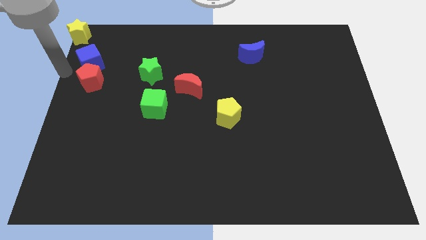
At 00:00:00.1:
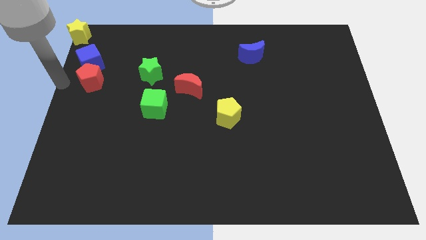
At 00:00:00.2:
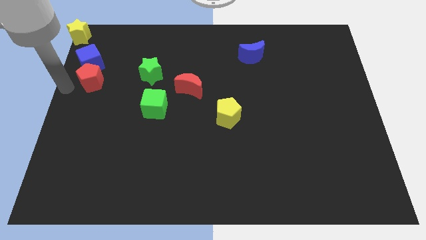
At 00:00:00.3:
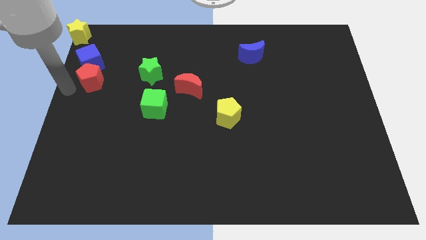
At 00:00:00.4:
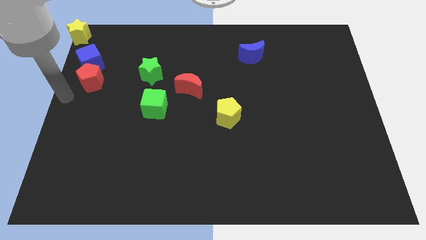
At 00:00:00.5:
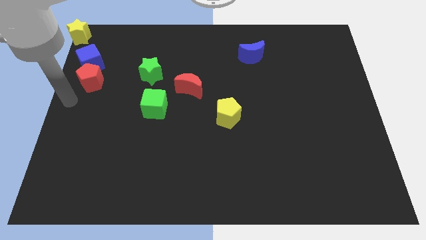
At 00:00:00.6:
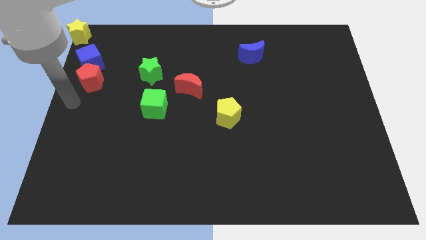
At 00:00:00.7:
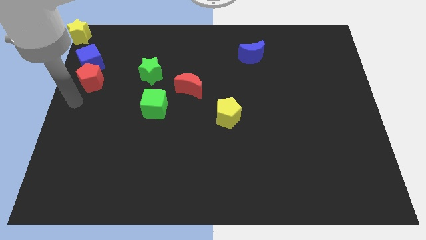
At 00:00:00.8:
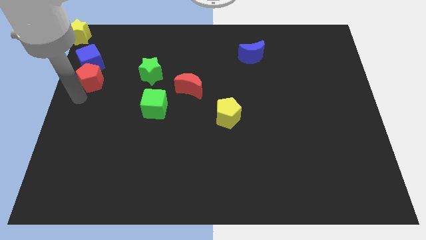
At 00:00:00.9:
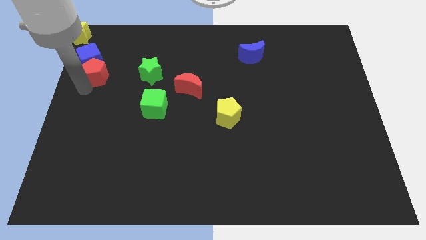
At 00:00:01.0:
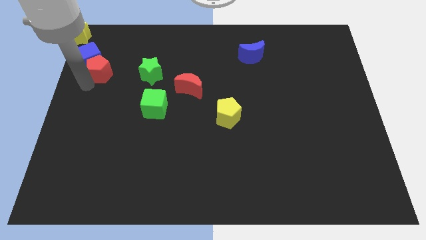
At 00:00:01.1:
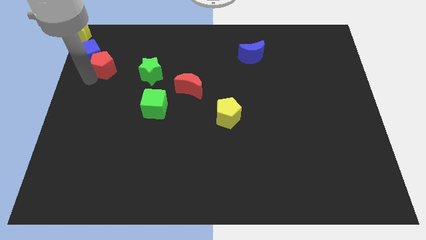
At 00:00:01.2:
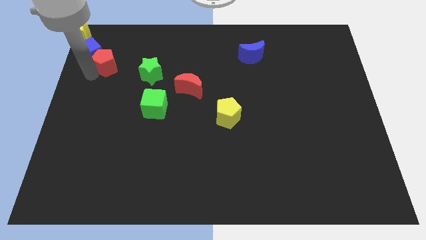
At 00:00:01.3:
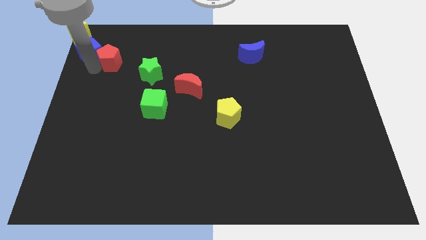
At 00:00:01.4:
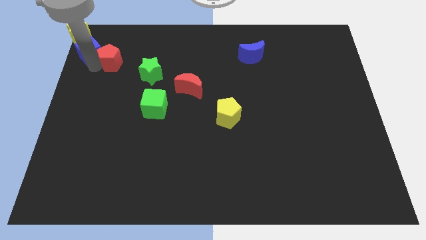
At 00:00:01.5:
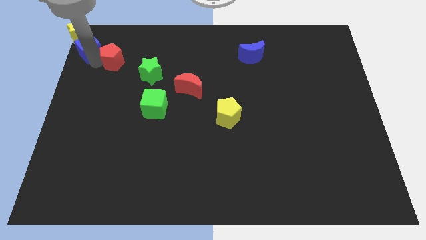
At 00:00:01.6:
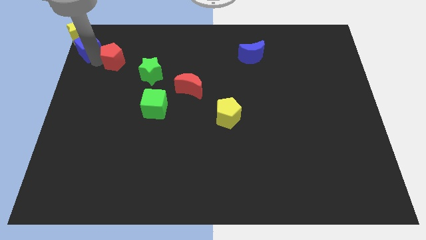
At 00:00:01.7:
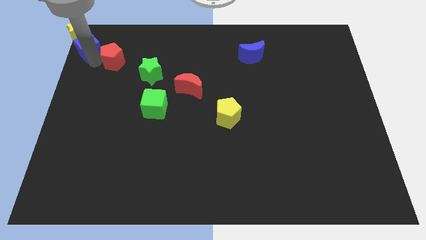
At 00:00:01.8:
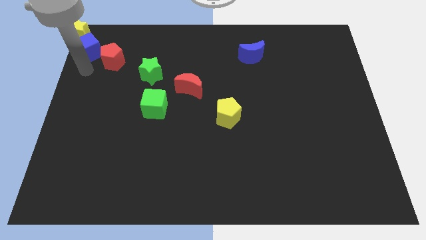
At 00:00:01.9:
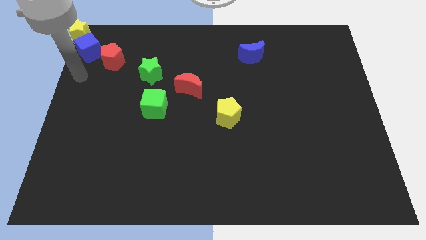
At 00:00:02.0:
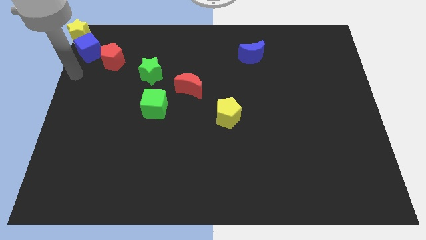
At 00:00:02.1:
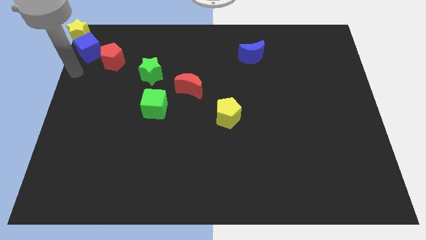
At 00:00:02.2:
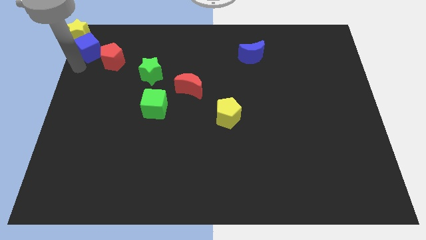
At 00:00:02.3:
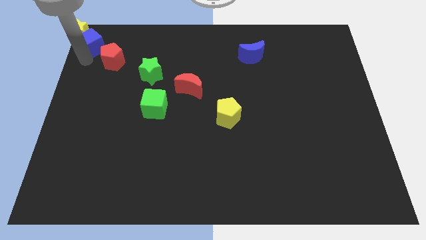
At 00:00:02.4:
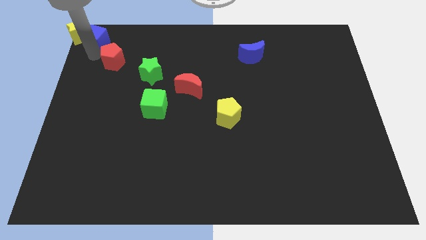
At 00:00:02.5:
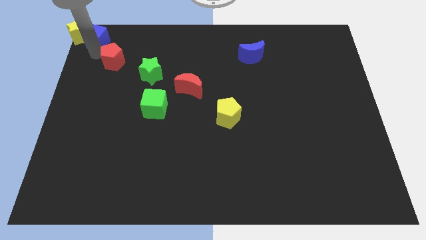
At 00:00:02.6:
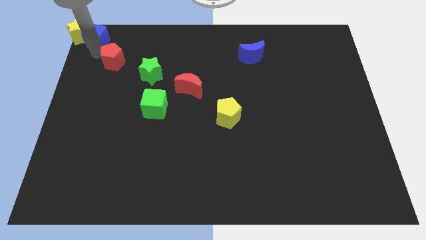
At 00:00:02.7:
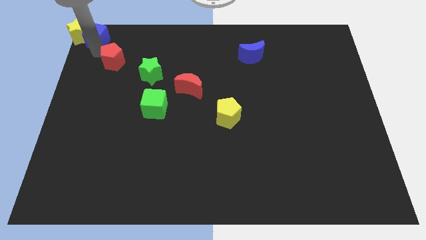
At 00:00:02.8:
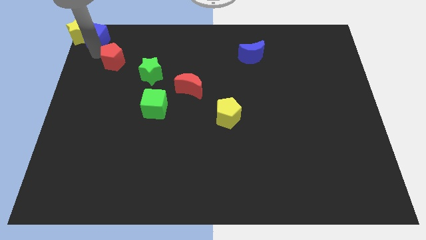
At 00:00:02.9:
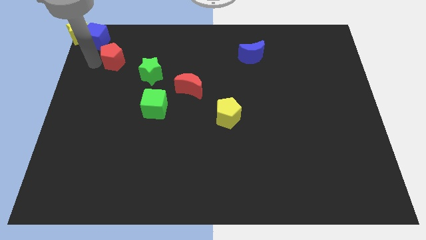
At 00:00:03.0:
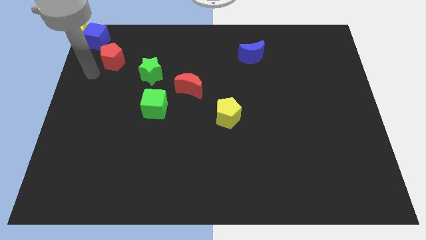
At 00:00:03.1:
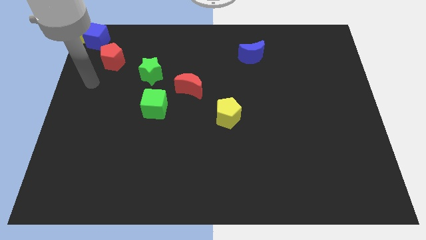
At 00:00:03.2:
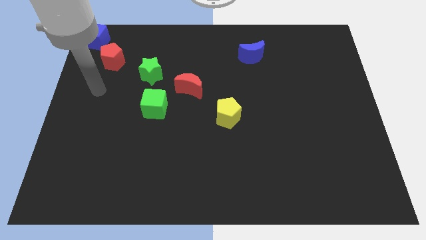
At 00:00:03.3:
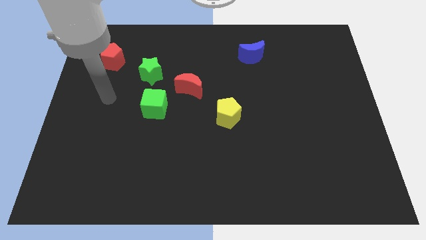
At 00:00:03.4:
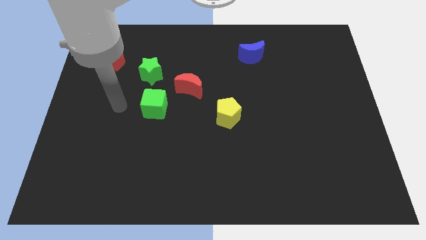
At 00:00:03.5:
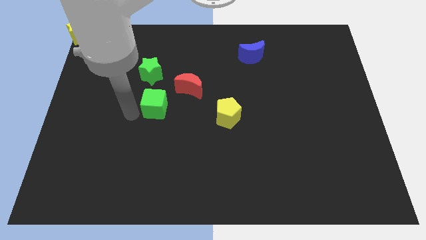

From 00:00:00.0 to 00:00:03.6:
place blue cube to the right of yellow star

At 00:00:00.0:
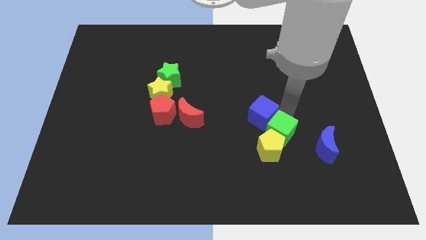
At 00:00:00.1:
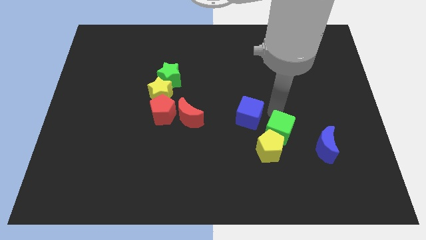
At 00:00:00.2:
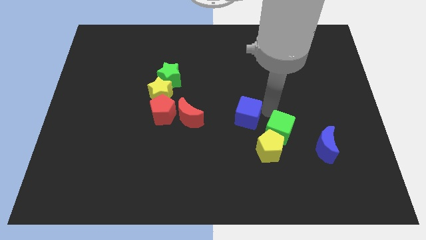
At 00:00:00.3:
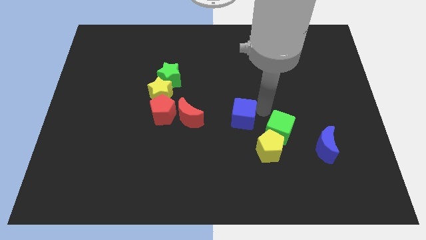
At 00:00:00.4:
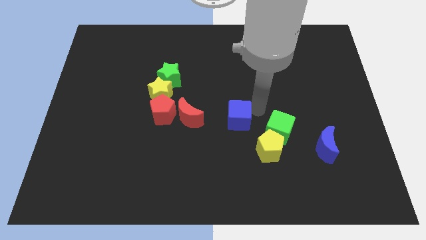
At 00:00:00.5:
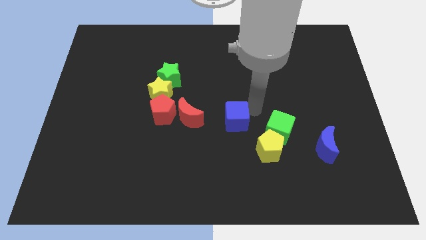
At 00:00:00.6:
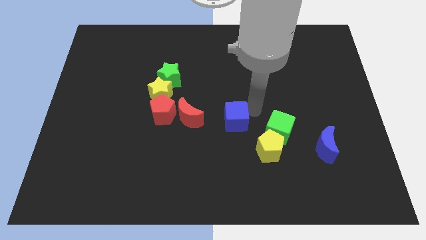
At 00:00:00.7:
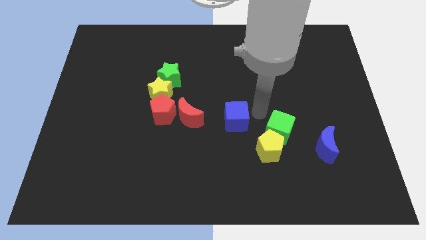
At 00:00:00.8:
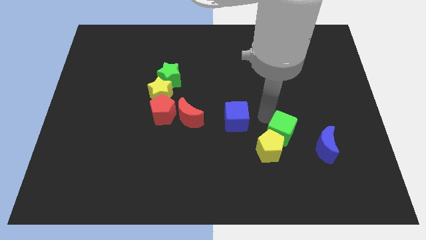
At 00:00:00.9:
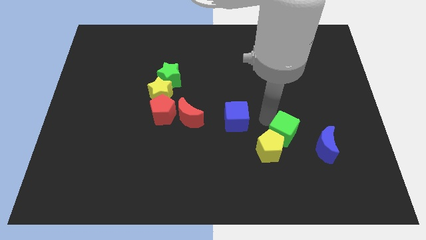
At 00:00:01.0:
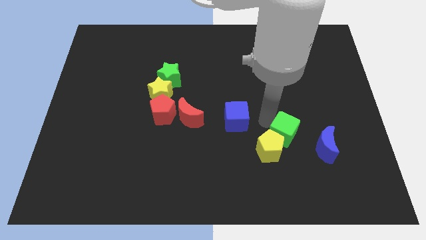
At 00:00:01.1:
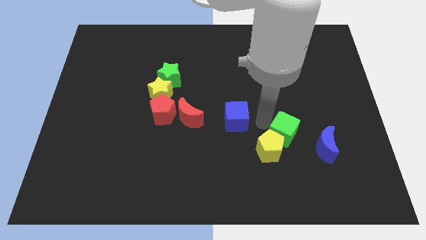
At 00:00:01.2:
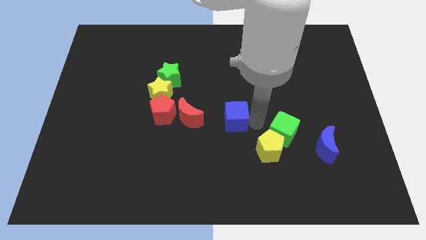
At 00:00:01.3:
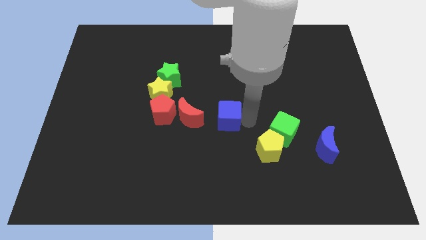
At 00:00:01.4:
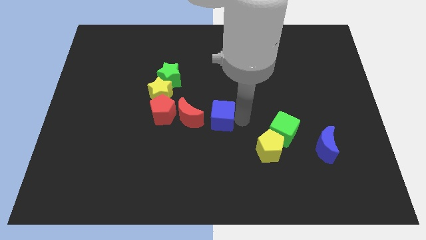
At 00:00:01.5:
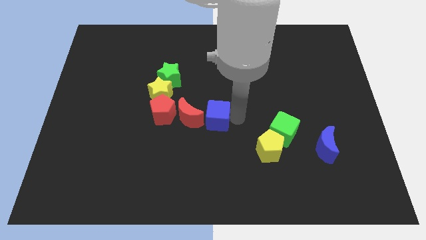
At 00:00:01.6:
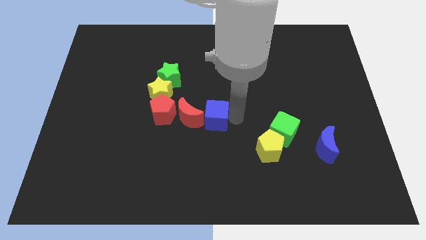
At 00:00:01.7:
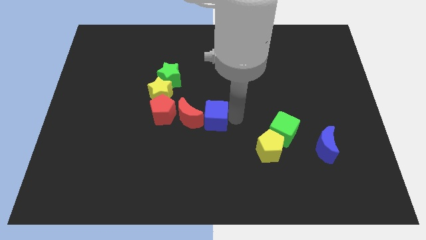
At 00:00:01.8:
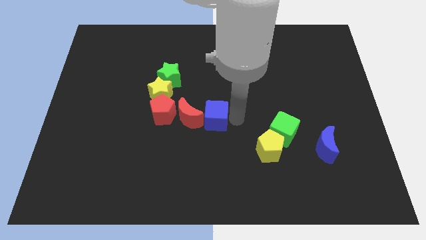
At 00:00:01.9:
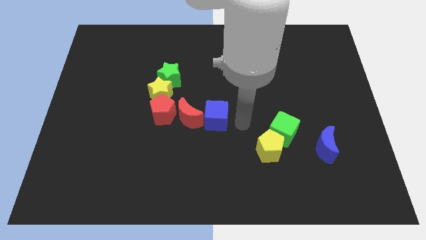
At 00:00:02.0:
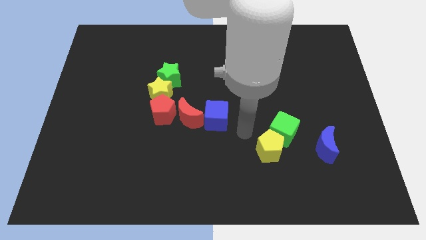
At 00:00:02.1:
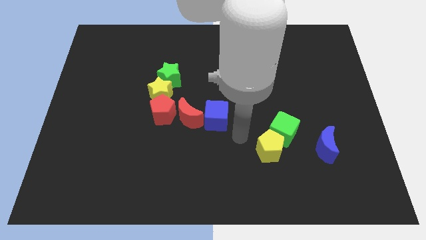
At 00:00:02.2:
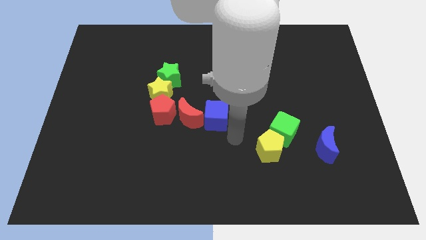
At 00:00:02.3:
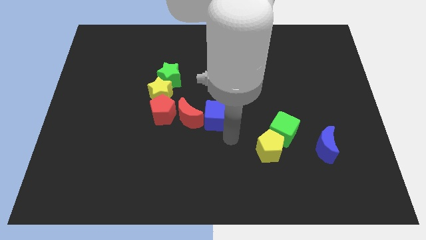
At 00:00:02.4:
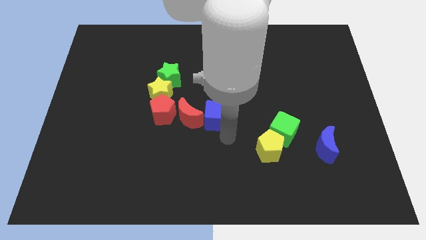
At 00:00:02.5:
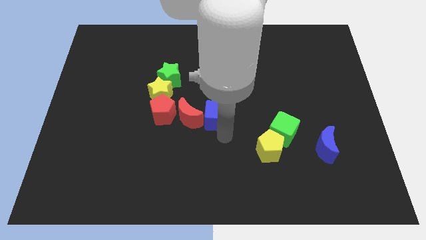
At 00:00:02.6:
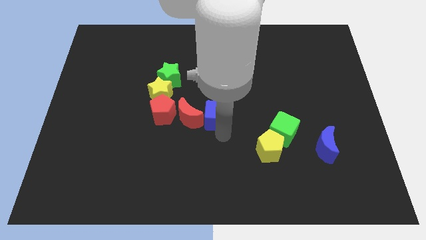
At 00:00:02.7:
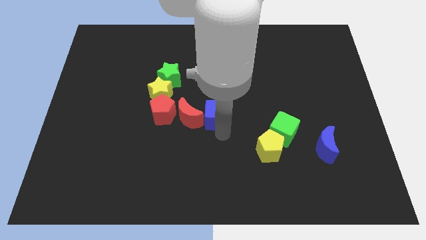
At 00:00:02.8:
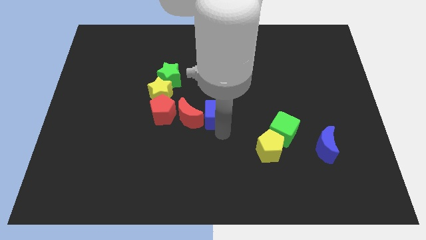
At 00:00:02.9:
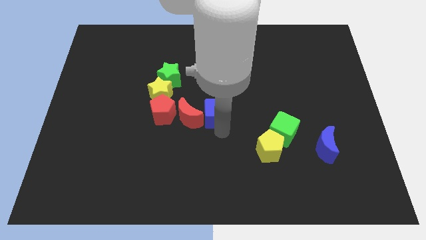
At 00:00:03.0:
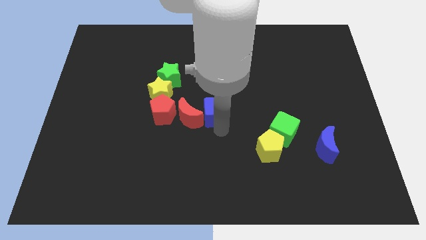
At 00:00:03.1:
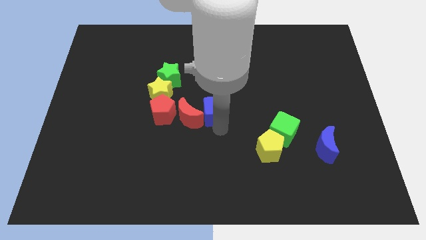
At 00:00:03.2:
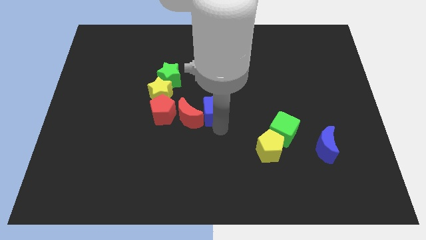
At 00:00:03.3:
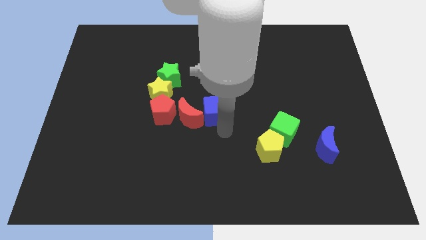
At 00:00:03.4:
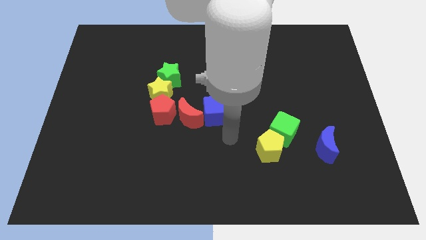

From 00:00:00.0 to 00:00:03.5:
move the blue cube to the right of the red crescent

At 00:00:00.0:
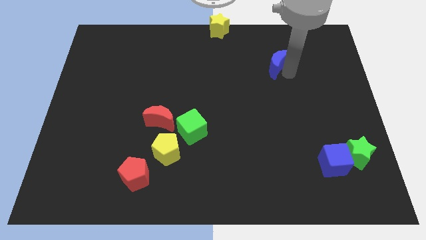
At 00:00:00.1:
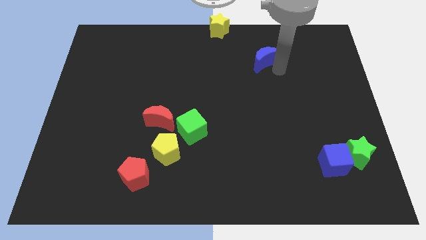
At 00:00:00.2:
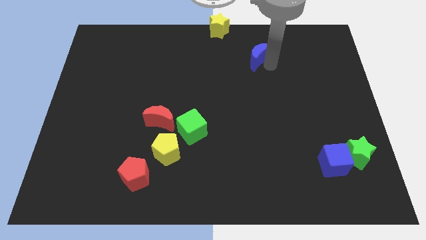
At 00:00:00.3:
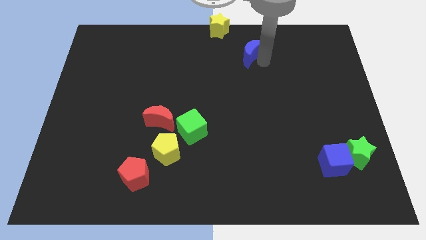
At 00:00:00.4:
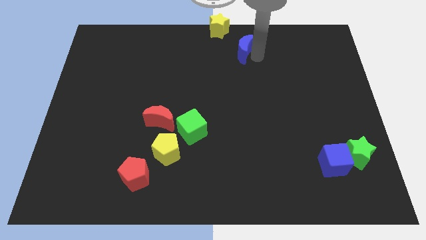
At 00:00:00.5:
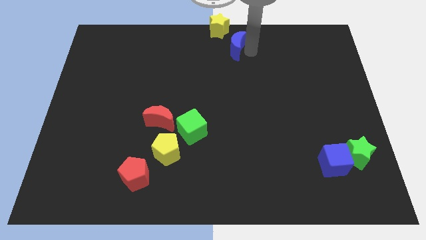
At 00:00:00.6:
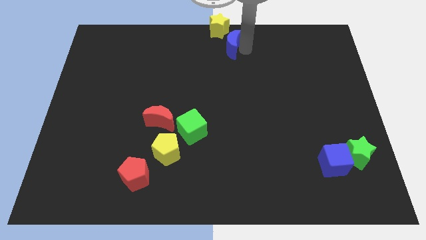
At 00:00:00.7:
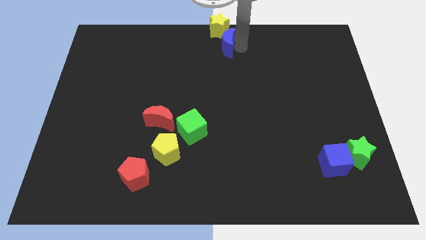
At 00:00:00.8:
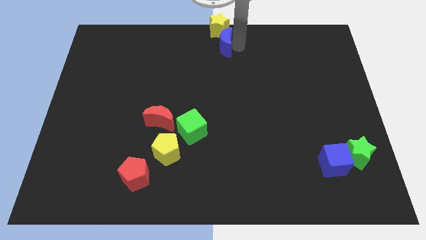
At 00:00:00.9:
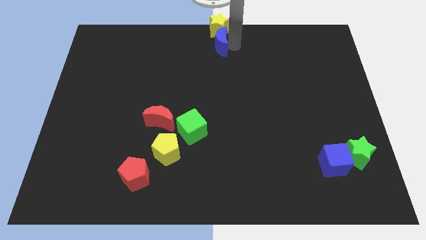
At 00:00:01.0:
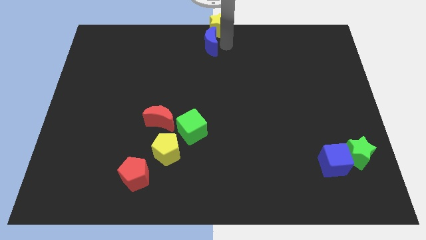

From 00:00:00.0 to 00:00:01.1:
place blue moon below yellow star

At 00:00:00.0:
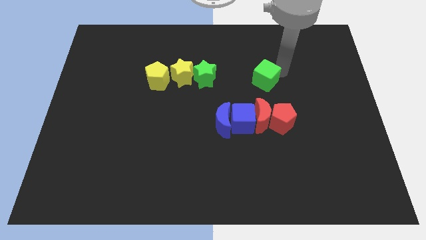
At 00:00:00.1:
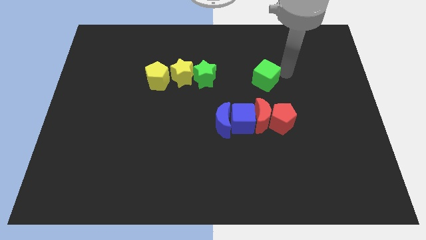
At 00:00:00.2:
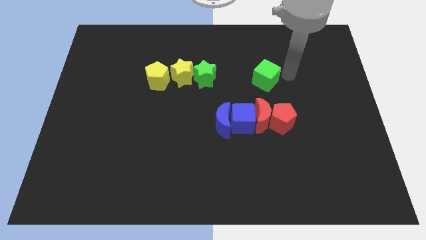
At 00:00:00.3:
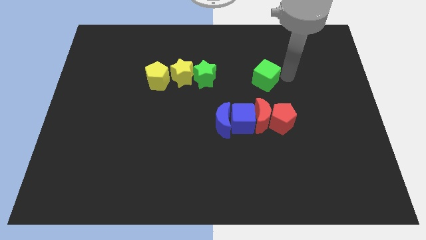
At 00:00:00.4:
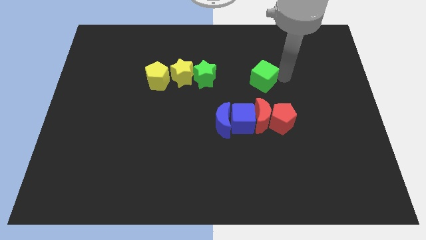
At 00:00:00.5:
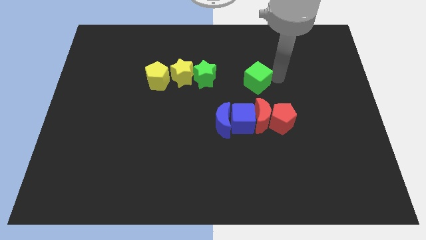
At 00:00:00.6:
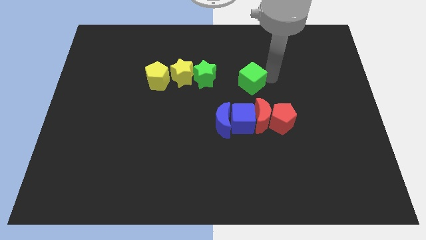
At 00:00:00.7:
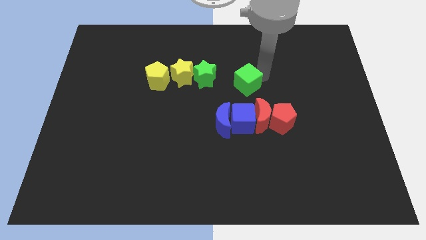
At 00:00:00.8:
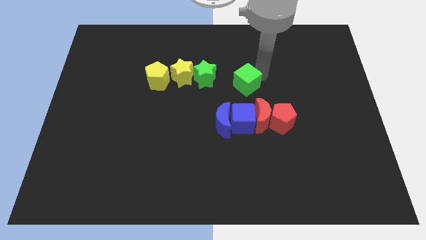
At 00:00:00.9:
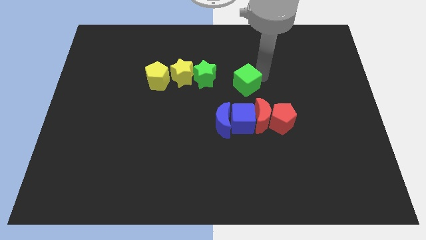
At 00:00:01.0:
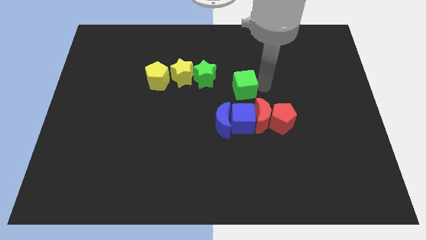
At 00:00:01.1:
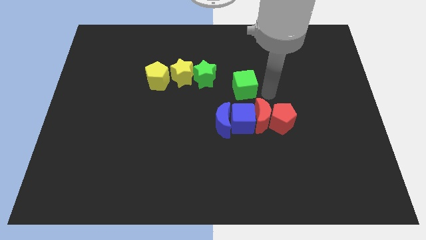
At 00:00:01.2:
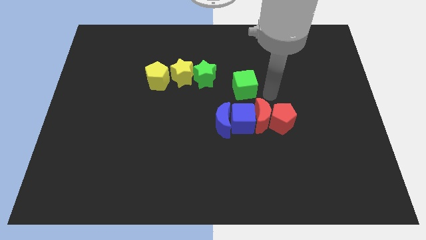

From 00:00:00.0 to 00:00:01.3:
move the green cube towards the green star
